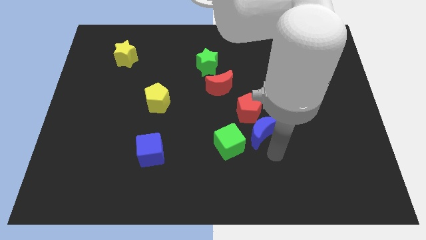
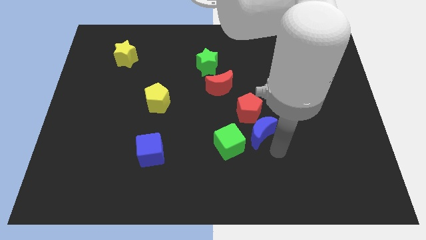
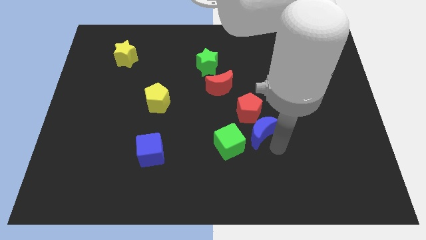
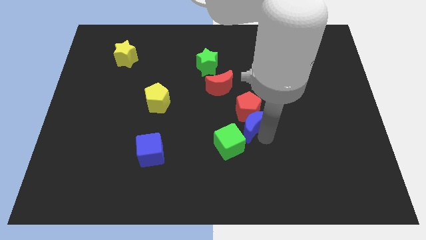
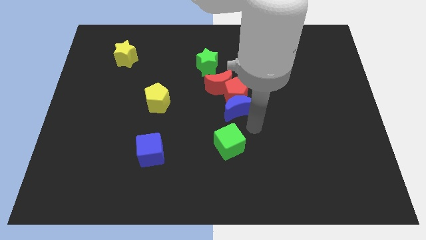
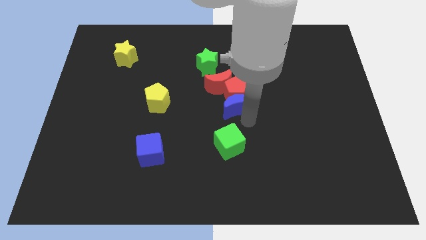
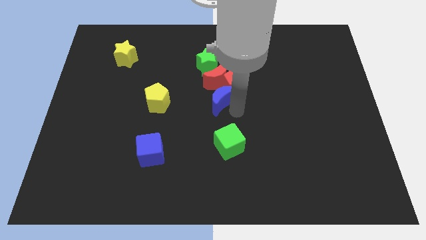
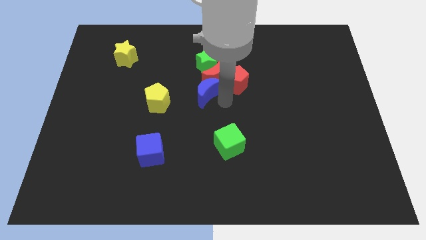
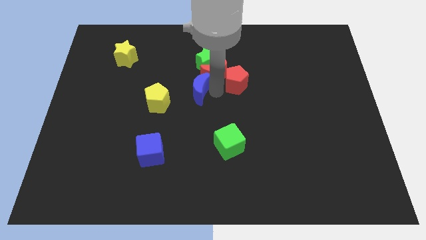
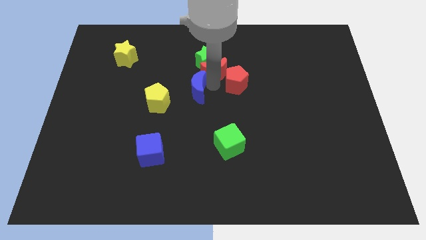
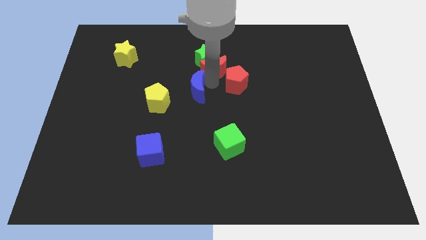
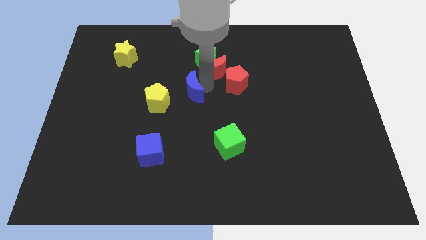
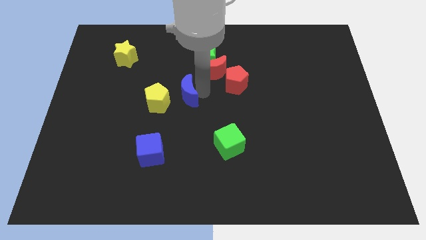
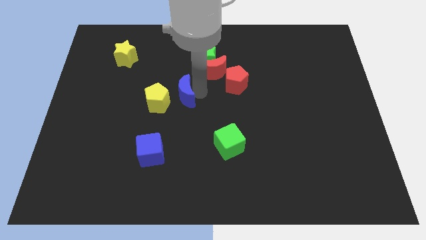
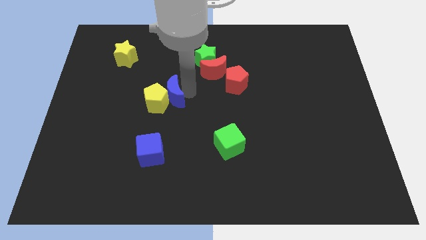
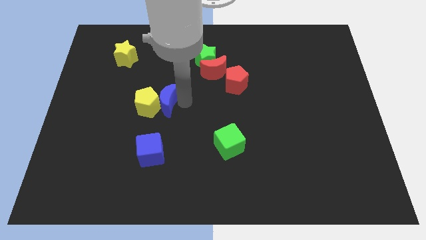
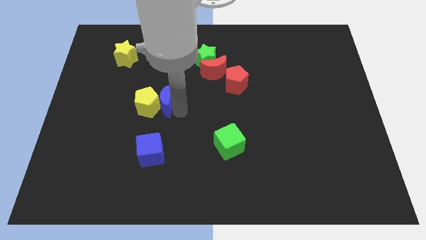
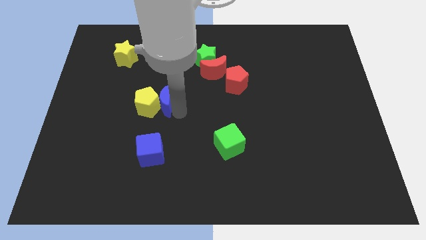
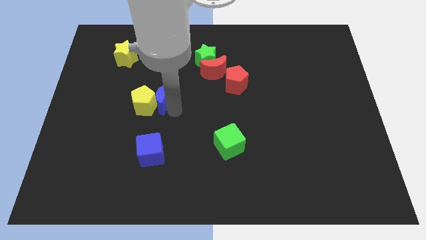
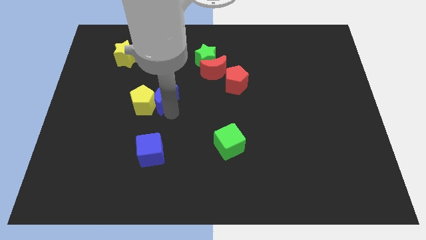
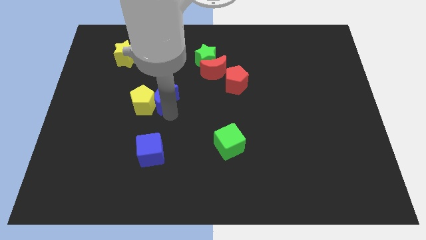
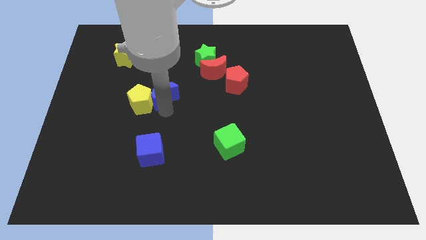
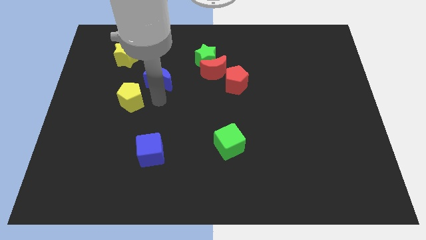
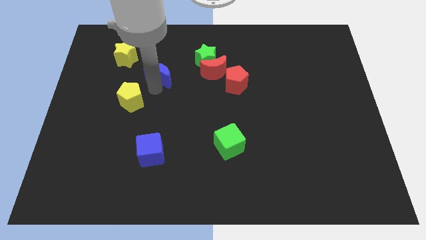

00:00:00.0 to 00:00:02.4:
push the blue moon into the yellow pentagon

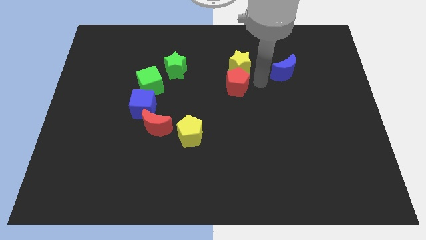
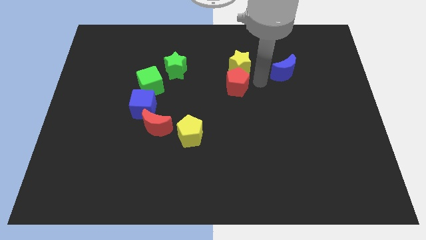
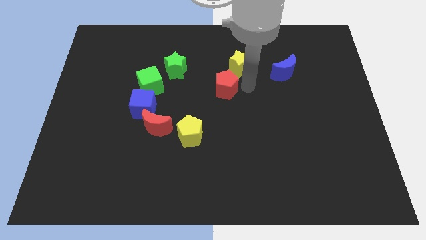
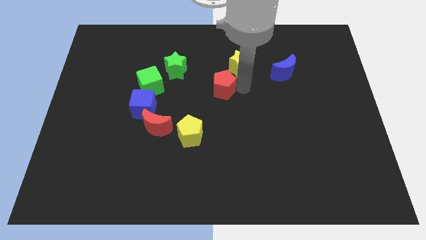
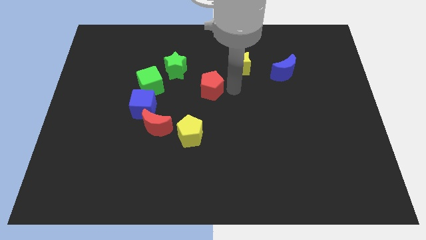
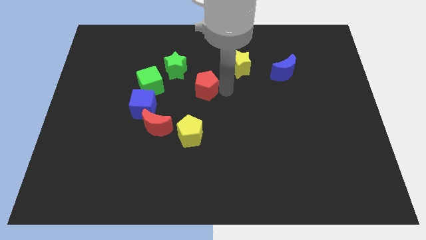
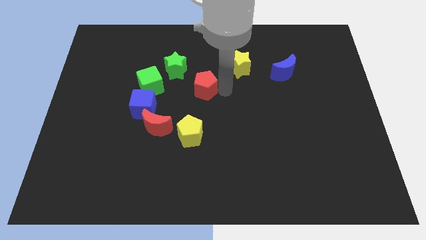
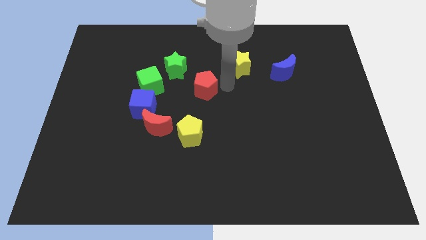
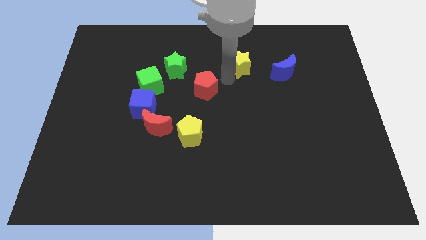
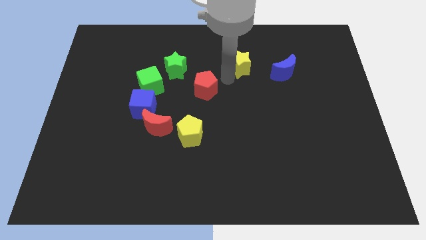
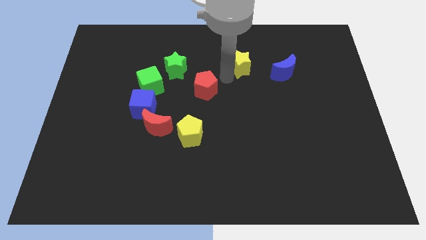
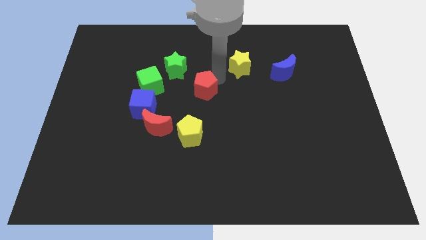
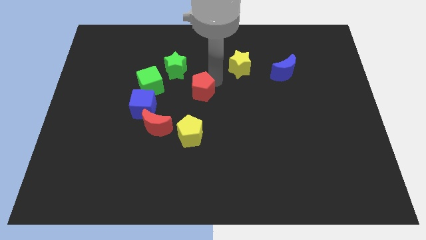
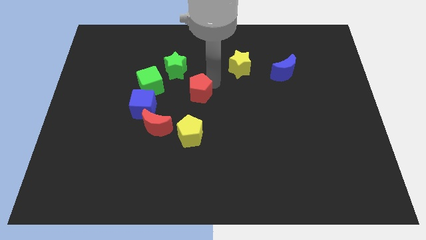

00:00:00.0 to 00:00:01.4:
move the red pentagon towards the center of the board

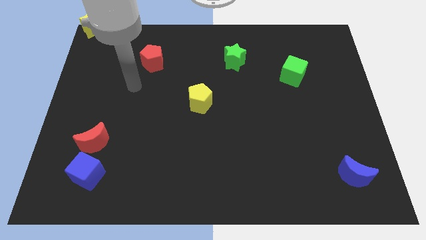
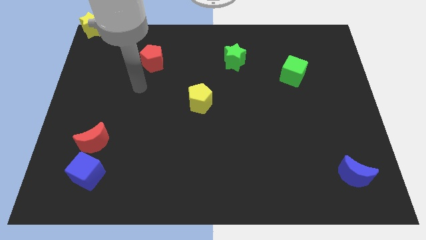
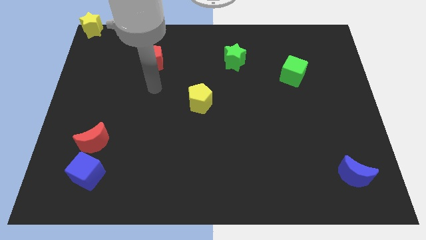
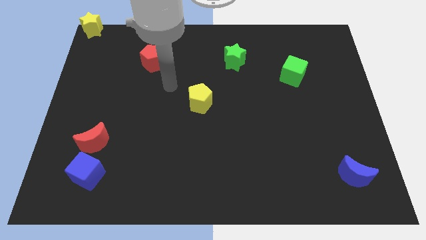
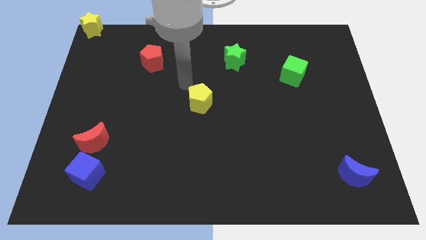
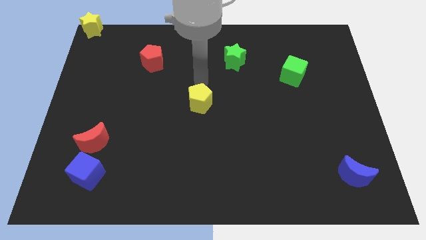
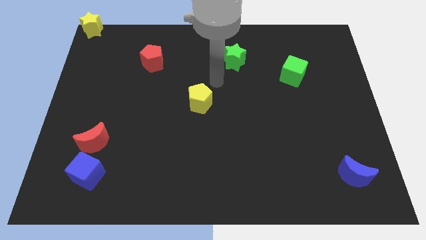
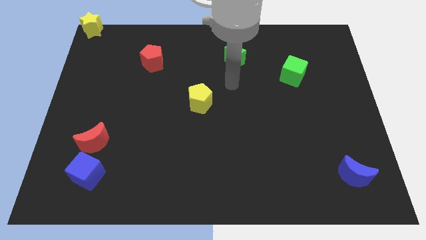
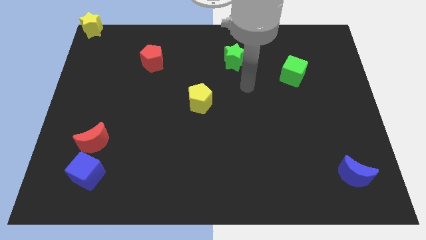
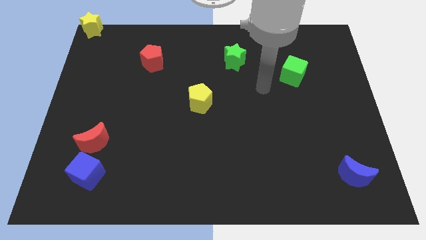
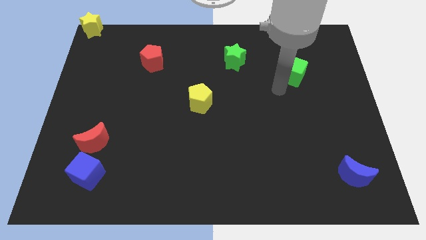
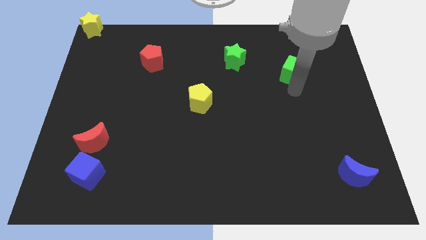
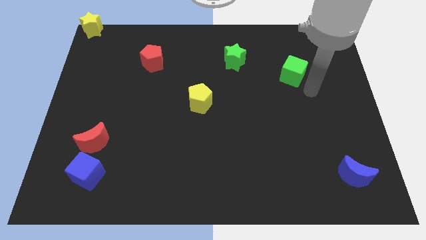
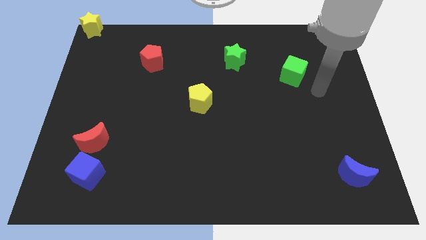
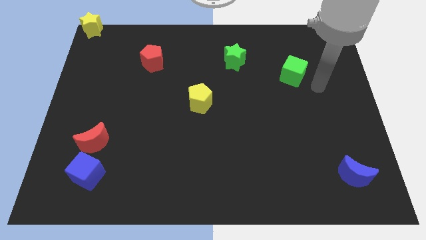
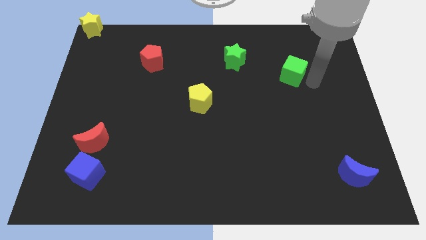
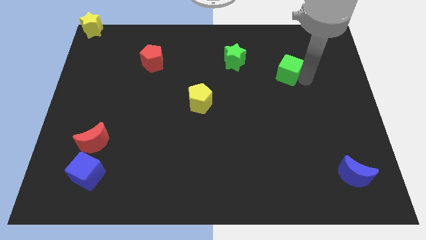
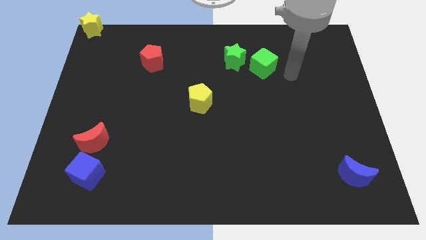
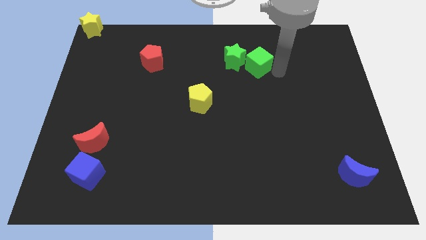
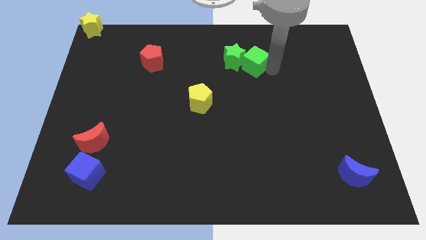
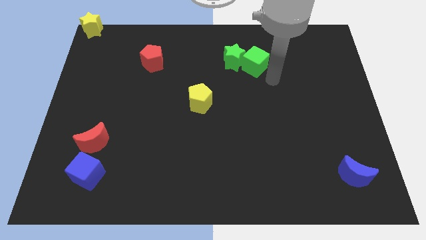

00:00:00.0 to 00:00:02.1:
move green cube into green star

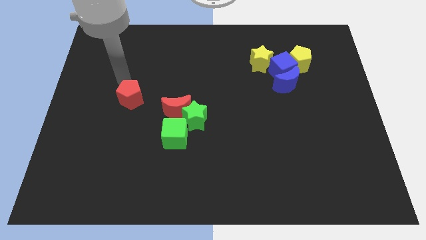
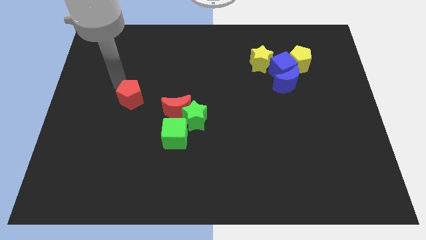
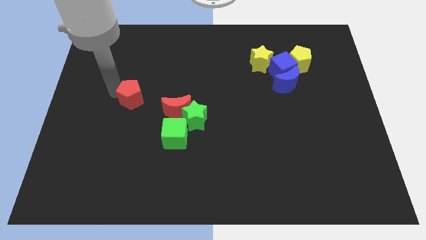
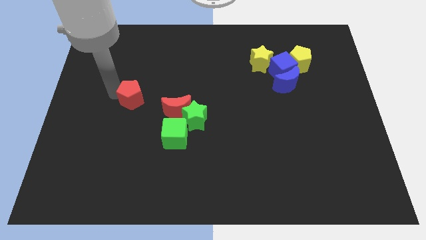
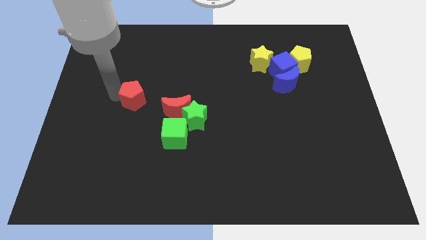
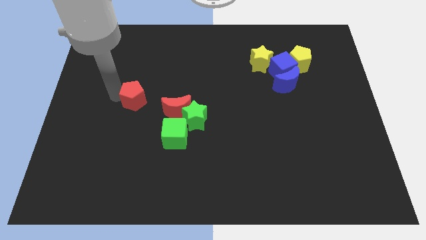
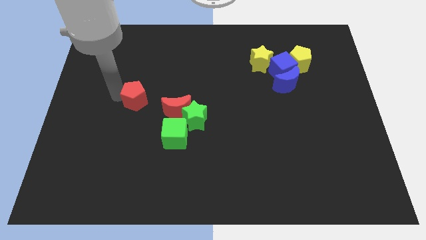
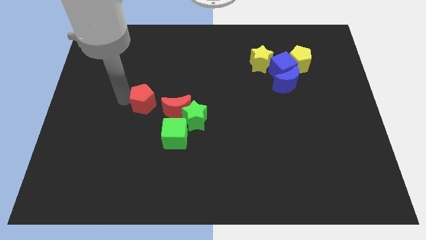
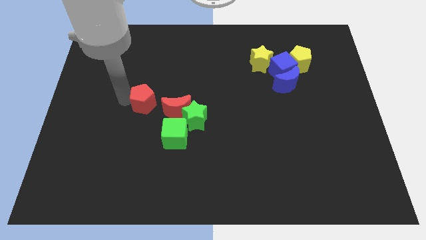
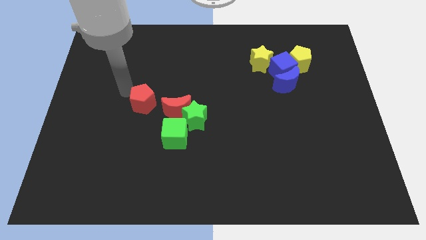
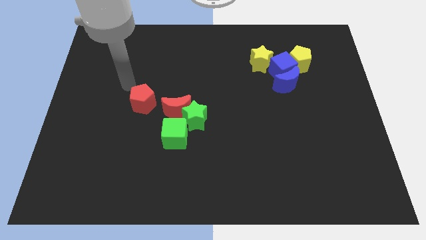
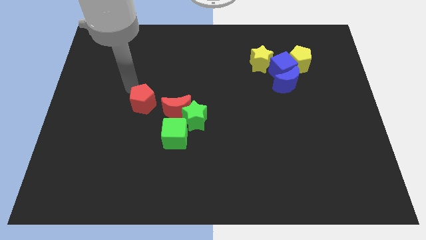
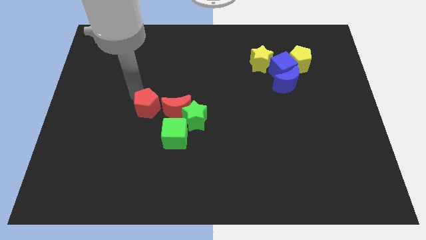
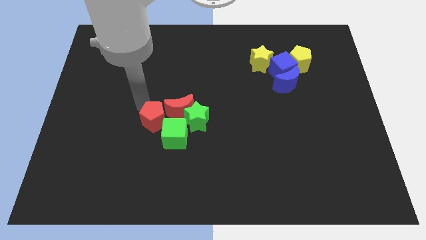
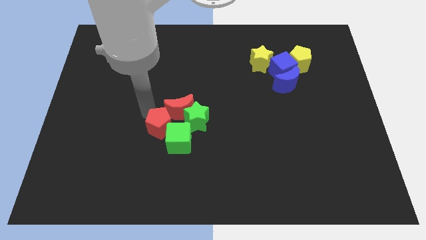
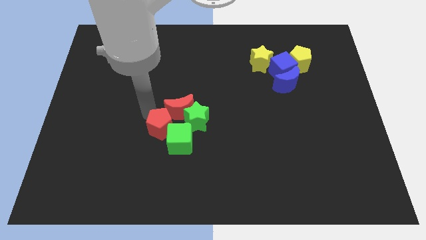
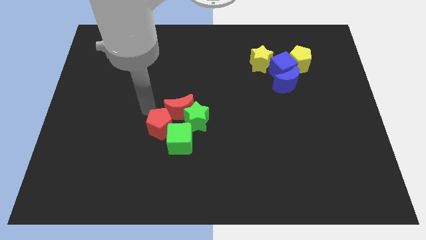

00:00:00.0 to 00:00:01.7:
push the red pentagon into the top of the green cube

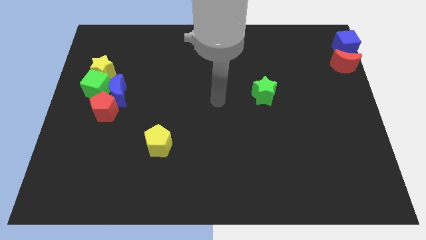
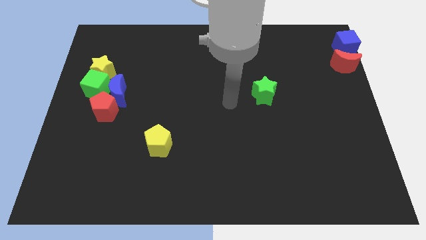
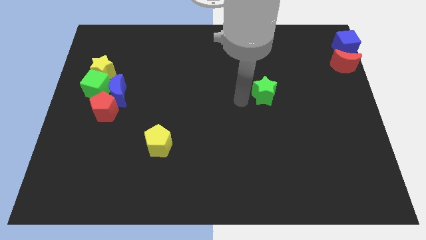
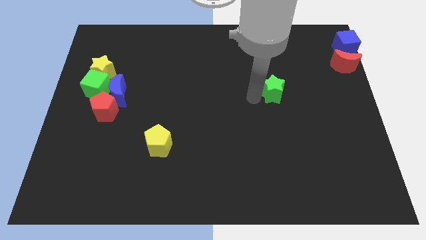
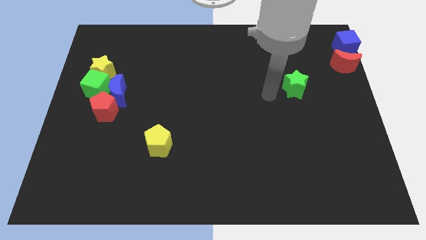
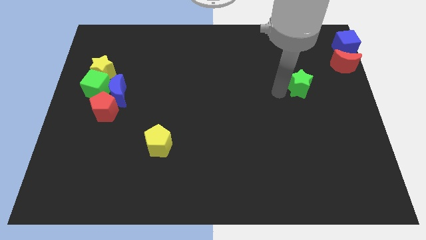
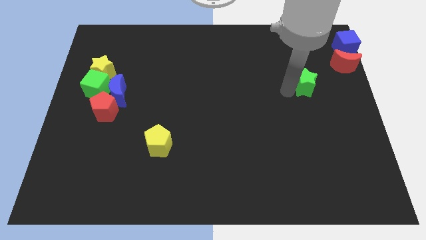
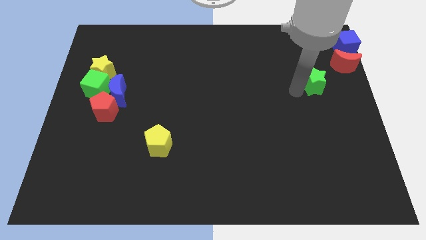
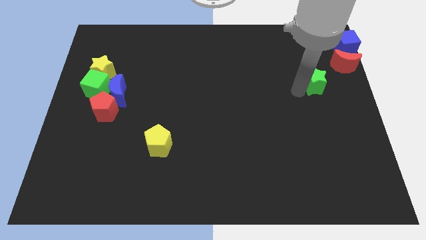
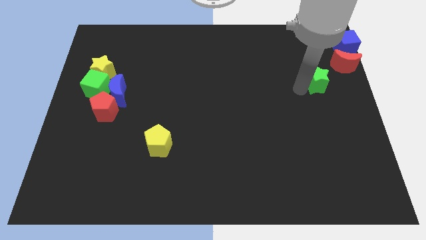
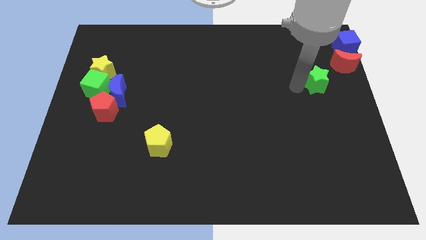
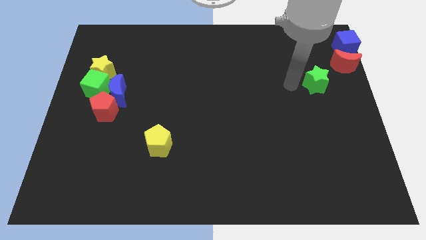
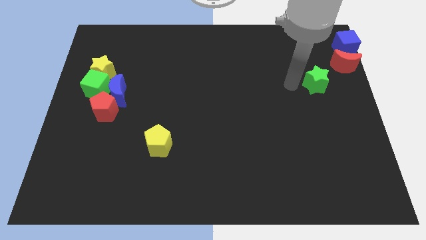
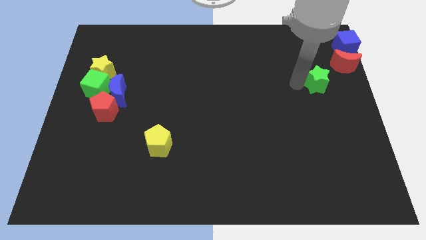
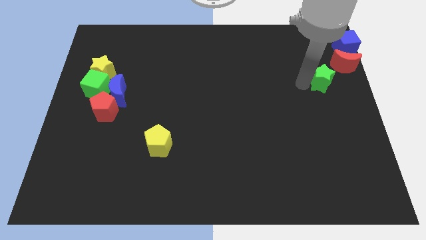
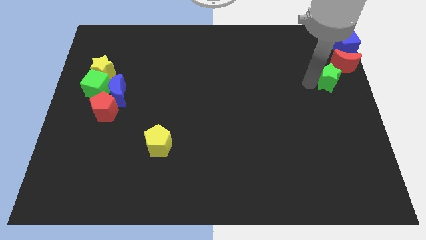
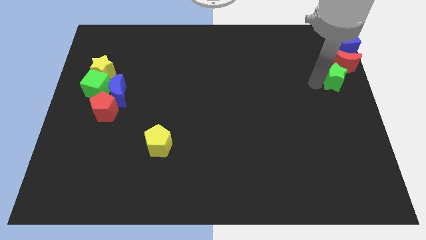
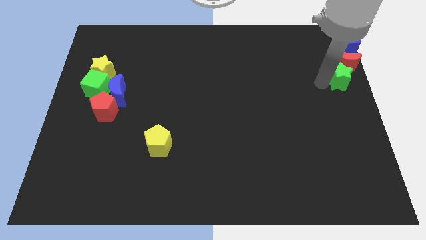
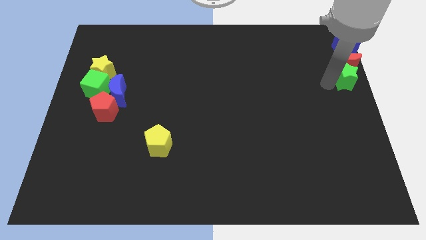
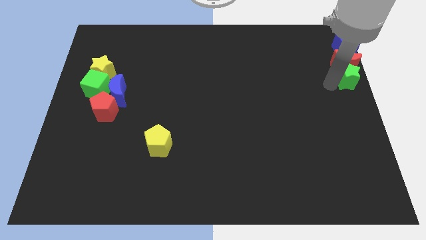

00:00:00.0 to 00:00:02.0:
place green star below to the red moon
